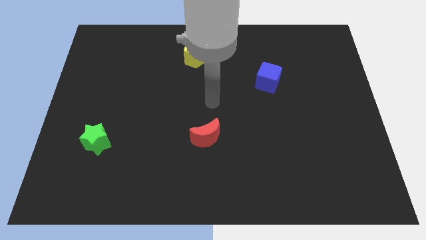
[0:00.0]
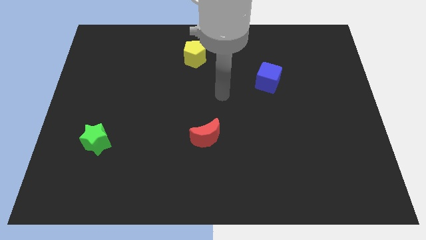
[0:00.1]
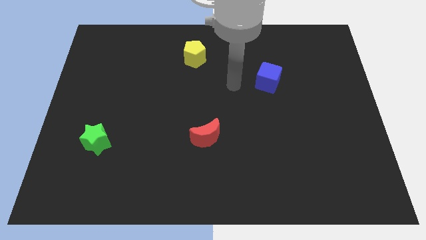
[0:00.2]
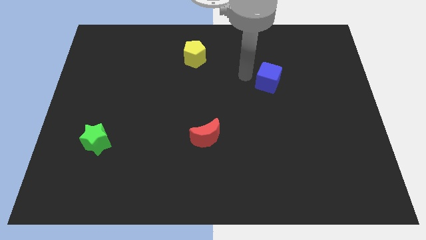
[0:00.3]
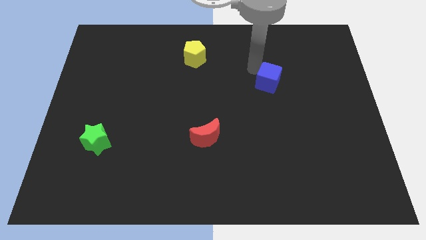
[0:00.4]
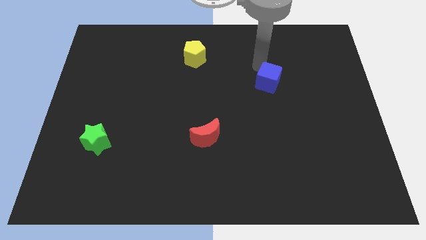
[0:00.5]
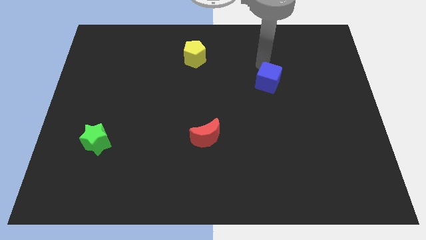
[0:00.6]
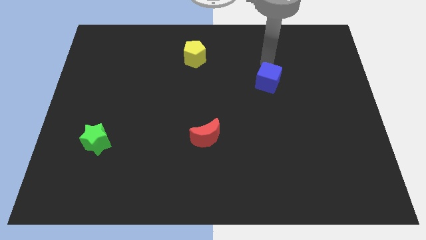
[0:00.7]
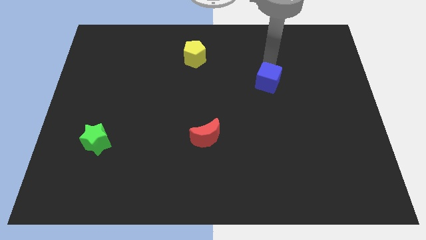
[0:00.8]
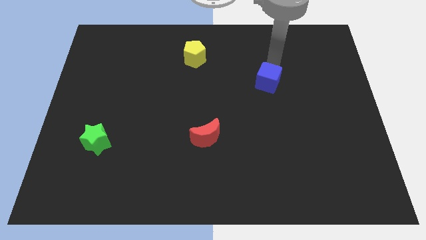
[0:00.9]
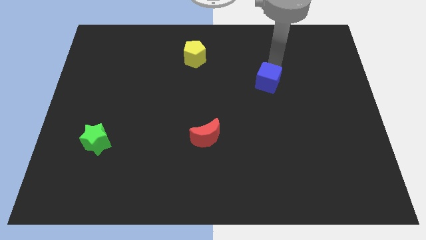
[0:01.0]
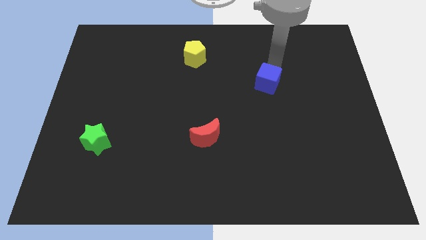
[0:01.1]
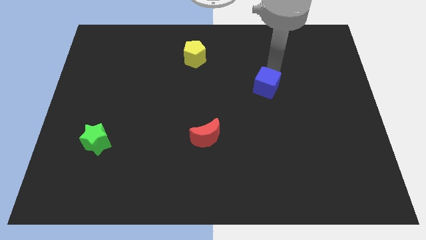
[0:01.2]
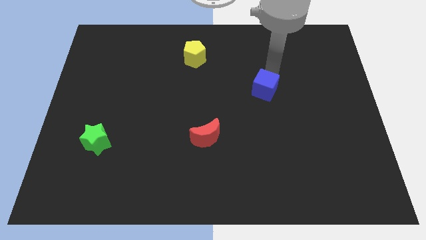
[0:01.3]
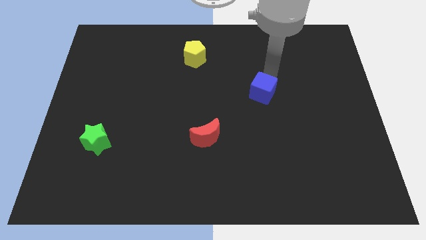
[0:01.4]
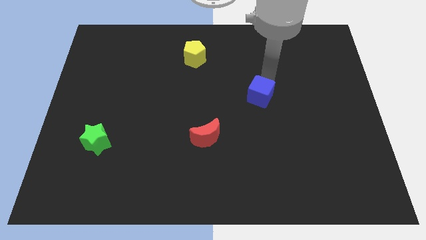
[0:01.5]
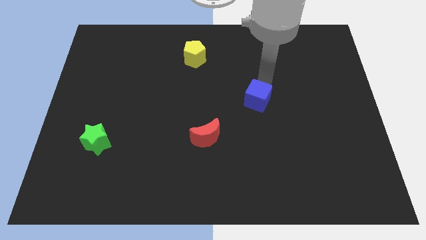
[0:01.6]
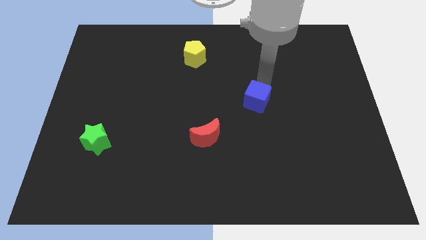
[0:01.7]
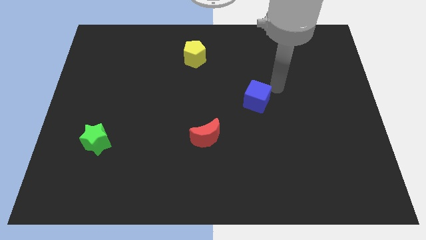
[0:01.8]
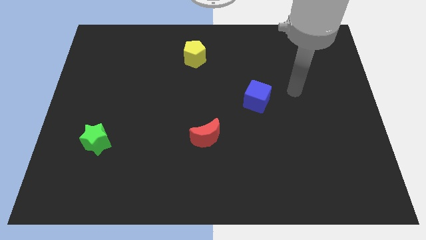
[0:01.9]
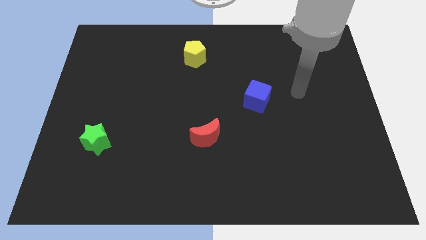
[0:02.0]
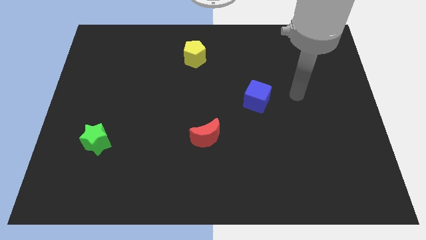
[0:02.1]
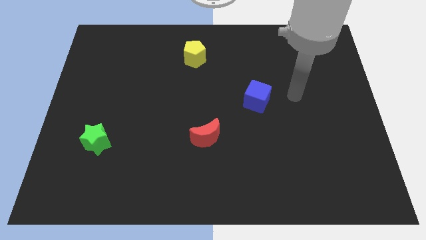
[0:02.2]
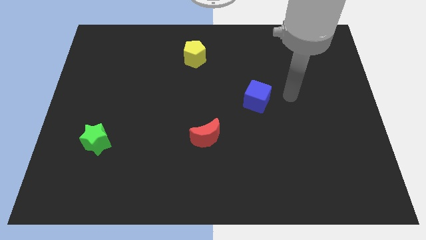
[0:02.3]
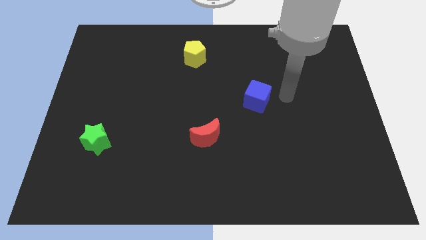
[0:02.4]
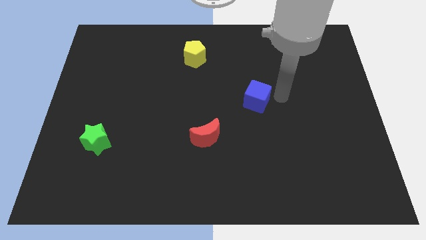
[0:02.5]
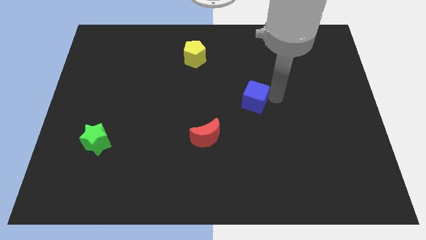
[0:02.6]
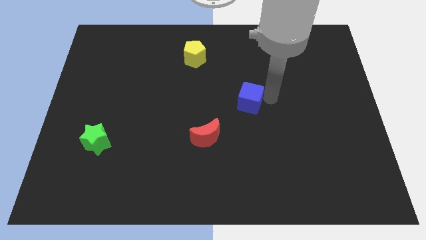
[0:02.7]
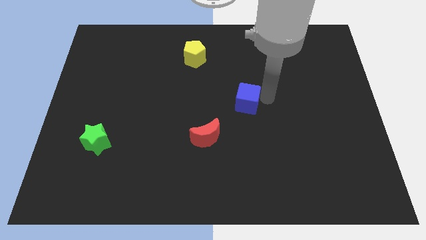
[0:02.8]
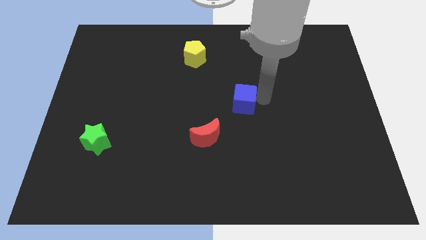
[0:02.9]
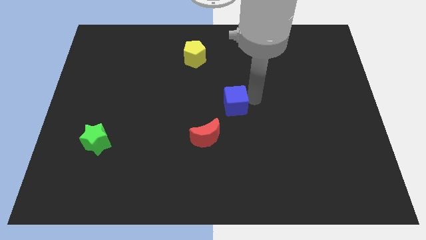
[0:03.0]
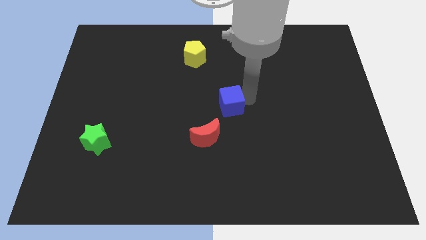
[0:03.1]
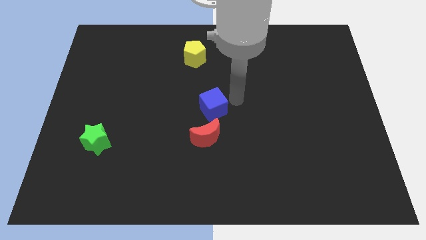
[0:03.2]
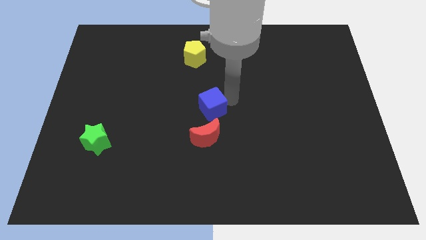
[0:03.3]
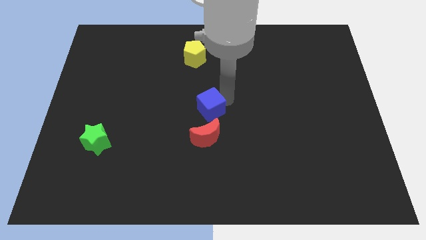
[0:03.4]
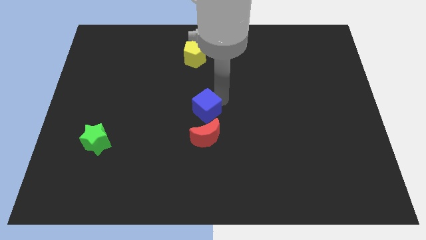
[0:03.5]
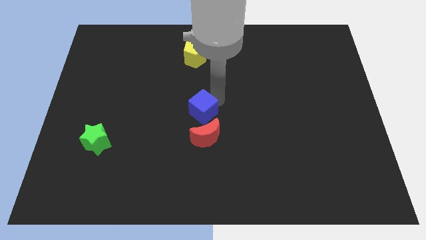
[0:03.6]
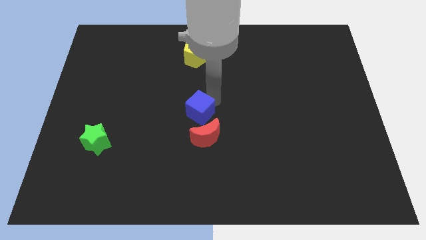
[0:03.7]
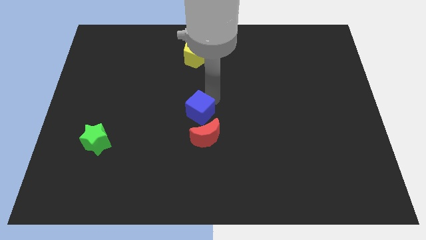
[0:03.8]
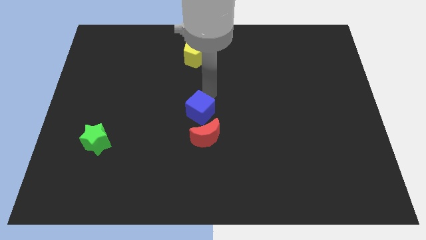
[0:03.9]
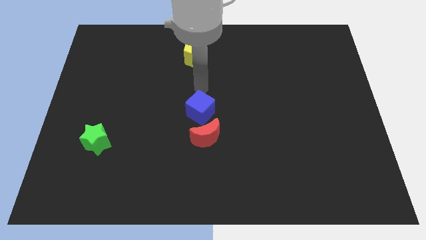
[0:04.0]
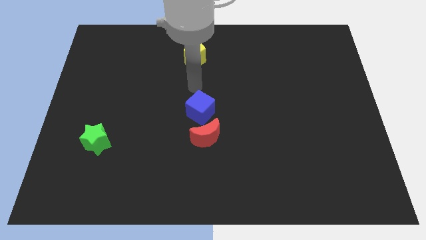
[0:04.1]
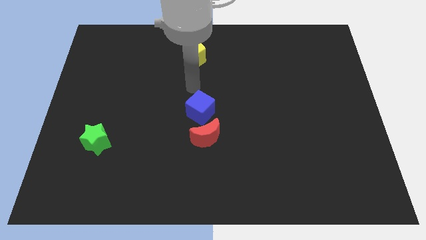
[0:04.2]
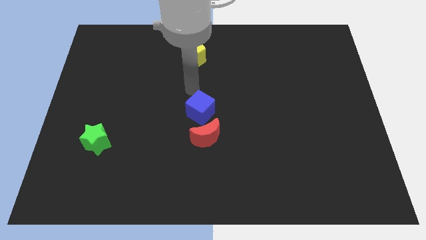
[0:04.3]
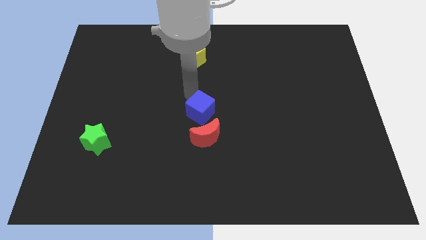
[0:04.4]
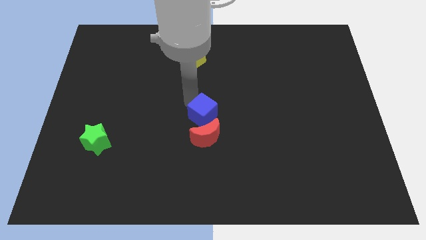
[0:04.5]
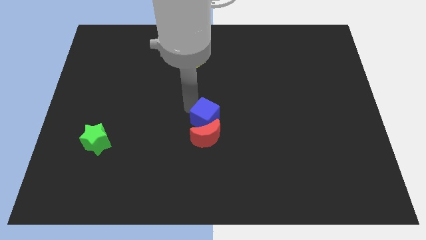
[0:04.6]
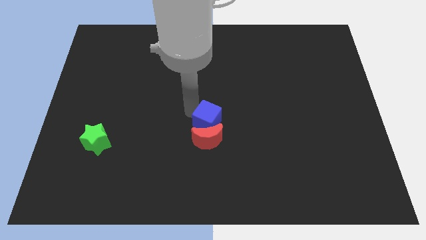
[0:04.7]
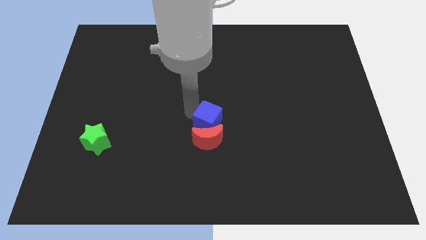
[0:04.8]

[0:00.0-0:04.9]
put the blue cube towards the red block

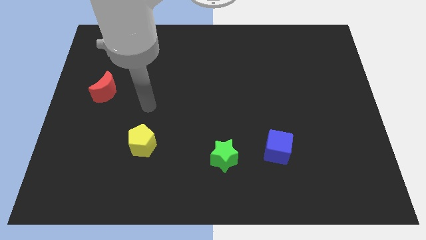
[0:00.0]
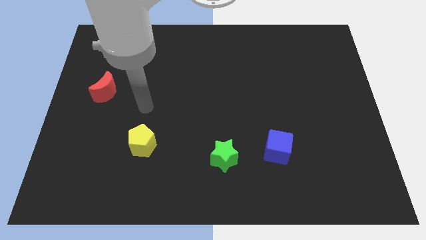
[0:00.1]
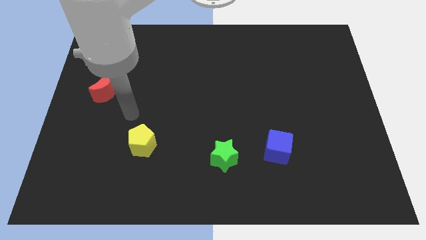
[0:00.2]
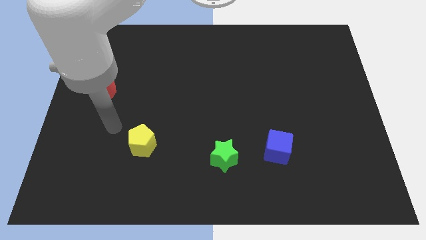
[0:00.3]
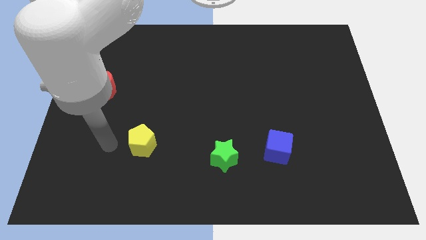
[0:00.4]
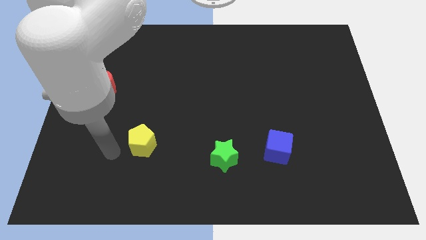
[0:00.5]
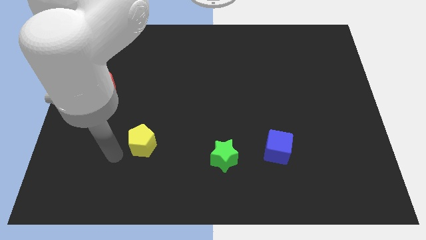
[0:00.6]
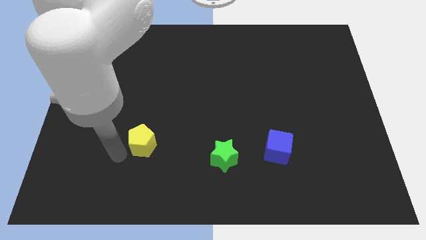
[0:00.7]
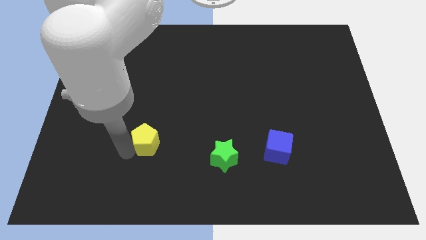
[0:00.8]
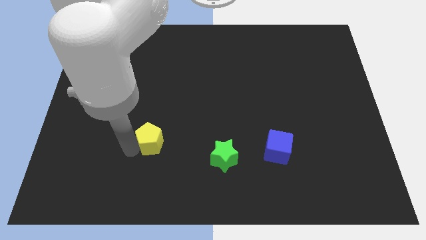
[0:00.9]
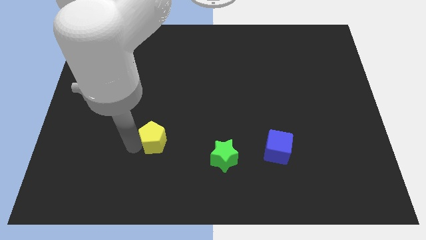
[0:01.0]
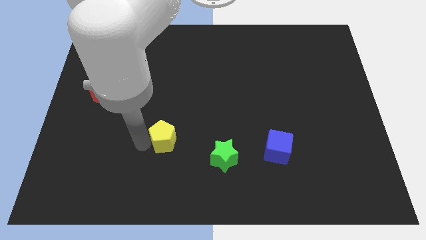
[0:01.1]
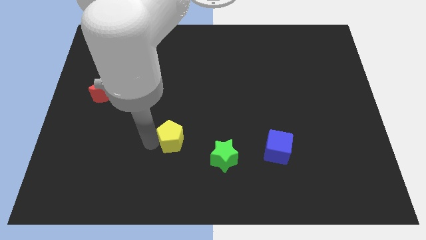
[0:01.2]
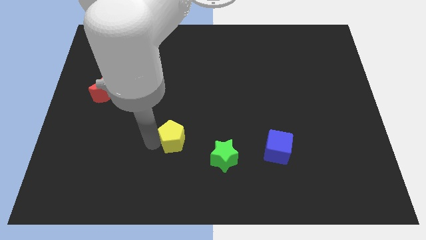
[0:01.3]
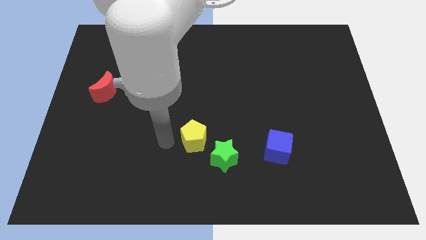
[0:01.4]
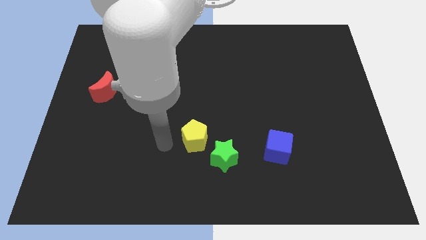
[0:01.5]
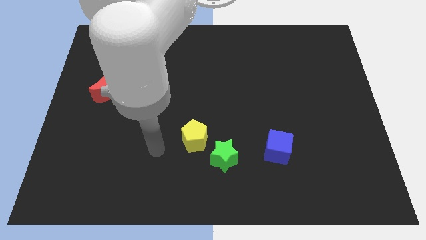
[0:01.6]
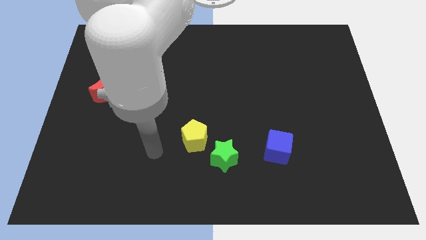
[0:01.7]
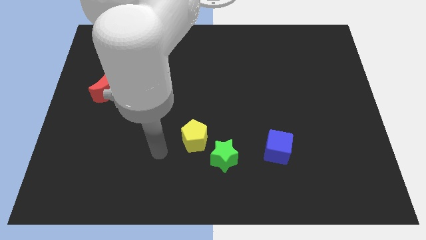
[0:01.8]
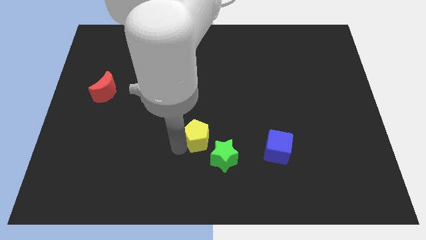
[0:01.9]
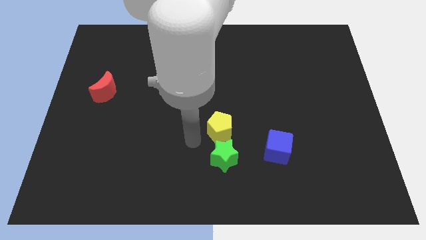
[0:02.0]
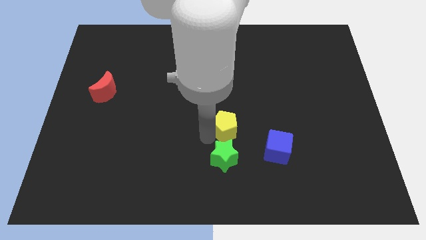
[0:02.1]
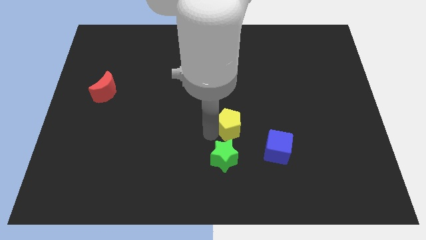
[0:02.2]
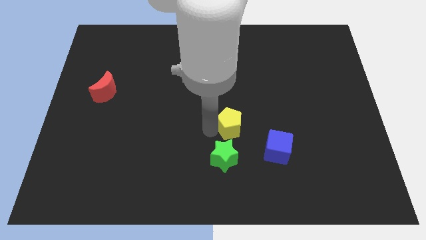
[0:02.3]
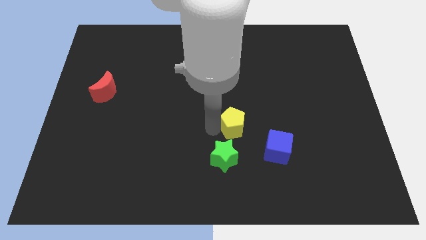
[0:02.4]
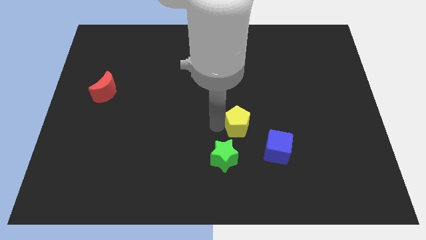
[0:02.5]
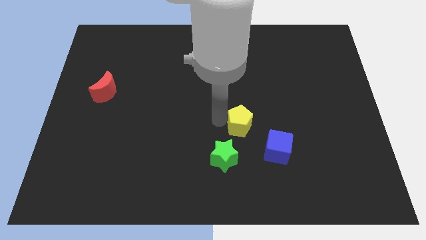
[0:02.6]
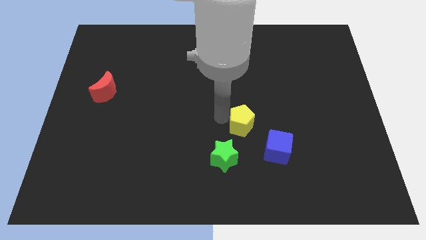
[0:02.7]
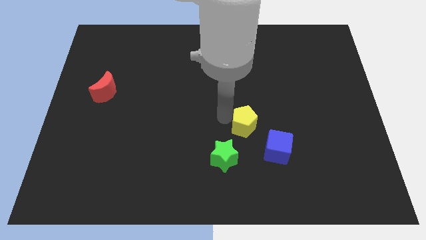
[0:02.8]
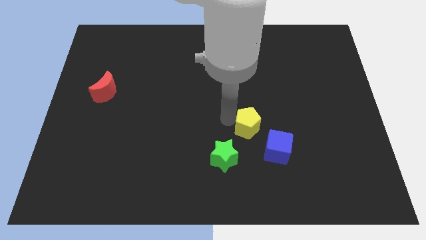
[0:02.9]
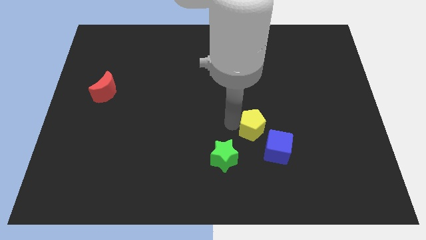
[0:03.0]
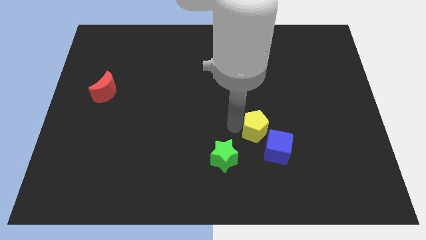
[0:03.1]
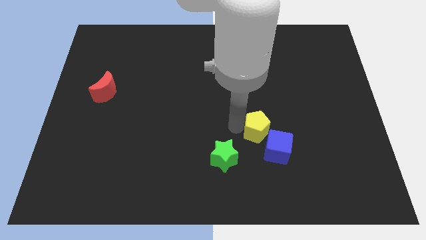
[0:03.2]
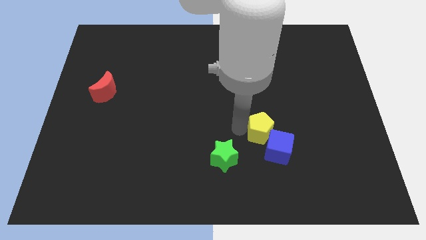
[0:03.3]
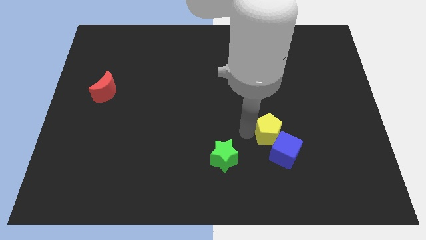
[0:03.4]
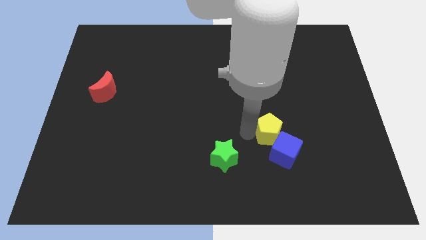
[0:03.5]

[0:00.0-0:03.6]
slide the pentagon towards the blue cube
